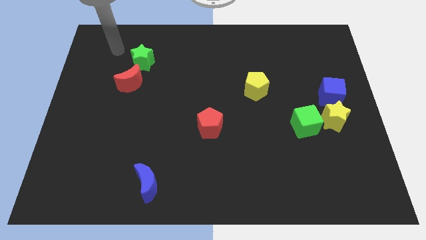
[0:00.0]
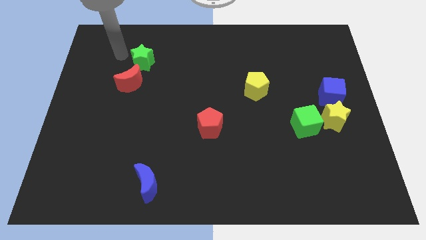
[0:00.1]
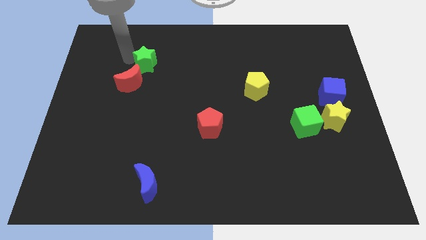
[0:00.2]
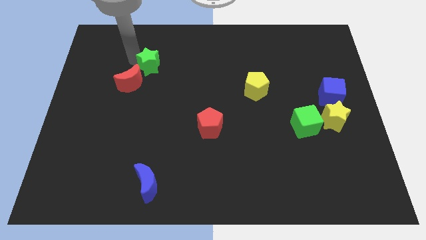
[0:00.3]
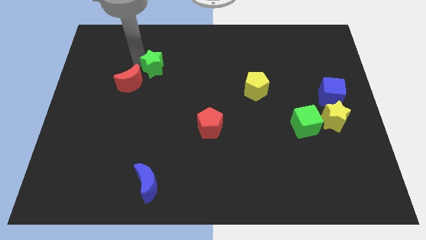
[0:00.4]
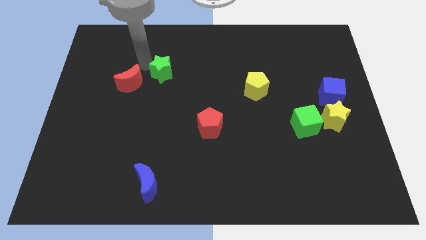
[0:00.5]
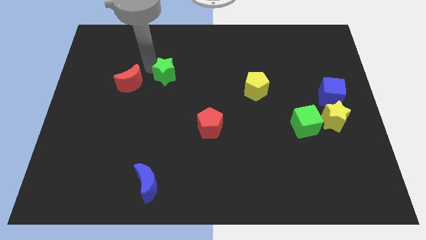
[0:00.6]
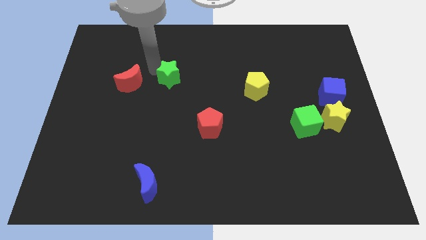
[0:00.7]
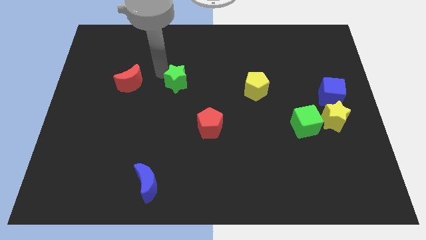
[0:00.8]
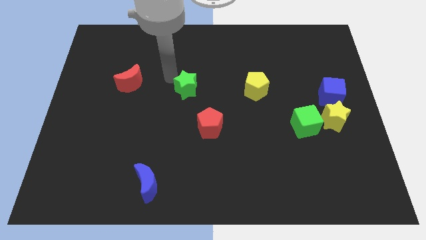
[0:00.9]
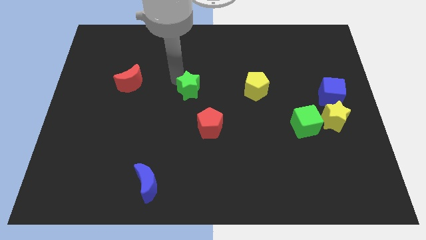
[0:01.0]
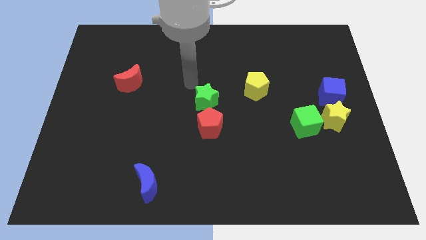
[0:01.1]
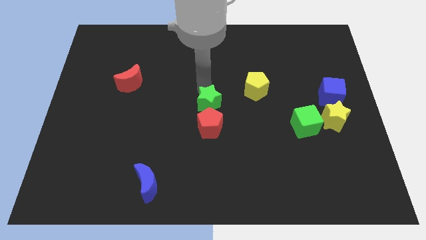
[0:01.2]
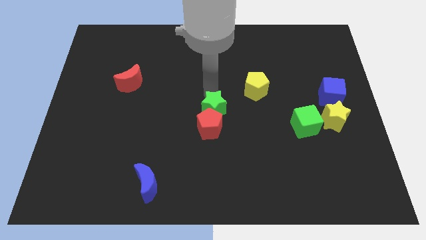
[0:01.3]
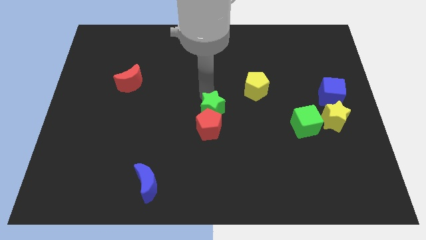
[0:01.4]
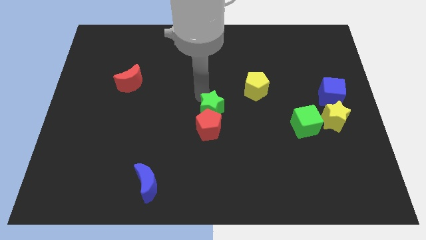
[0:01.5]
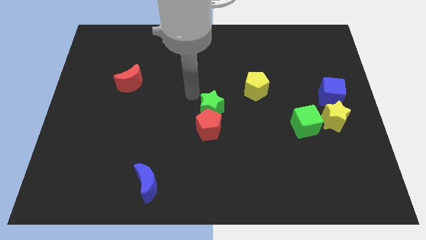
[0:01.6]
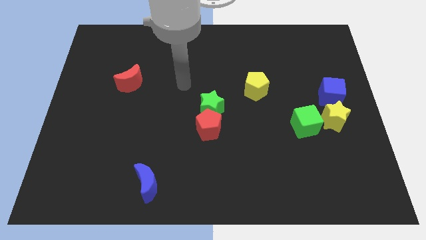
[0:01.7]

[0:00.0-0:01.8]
push the green star into the red pentagon

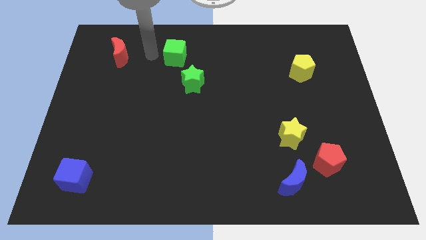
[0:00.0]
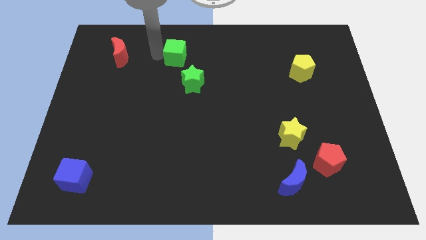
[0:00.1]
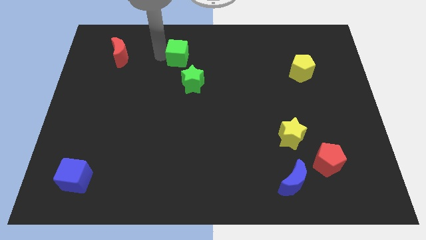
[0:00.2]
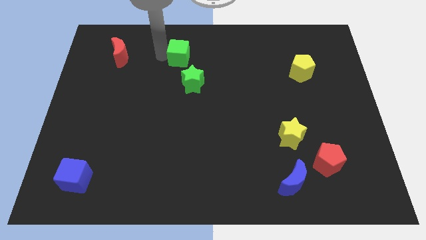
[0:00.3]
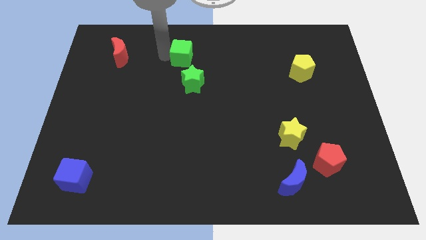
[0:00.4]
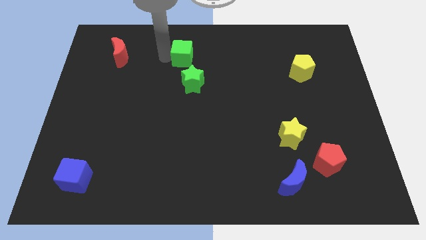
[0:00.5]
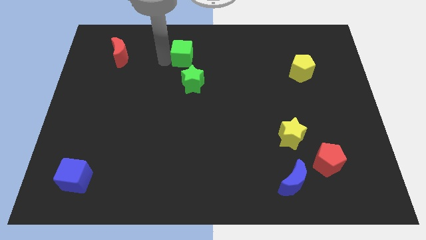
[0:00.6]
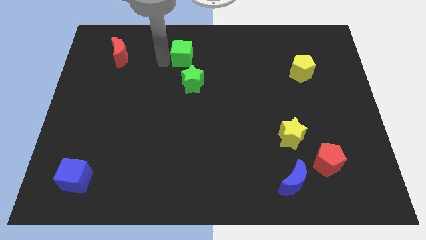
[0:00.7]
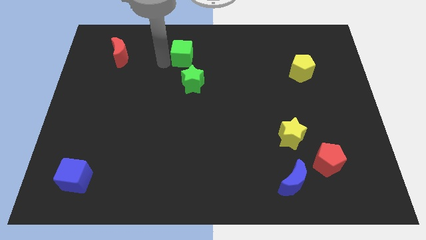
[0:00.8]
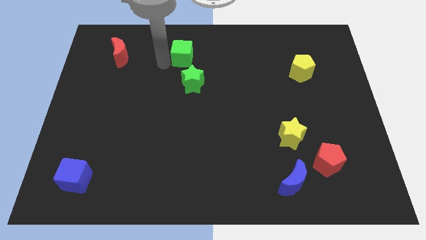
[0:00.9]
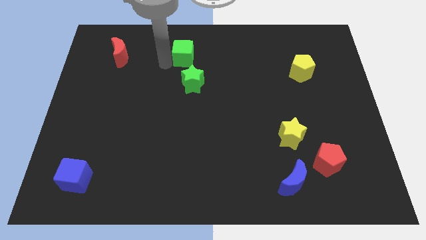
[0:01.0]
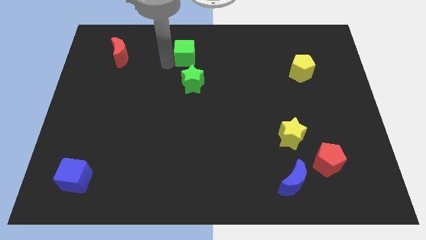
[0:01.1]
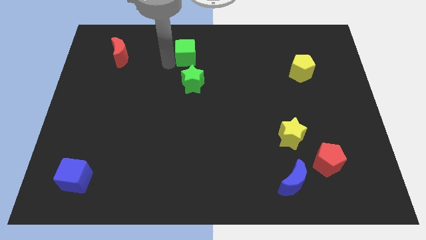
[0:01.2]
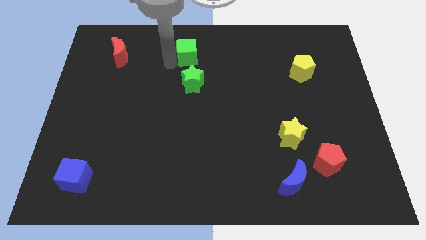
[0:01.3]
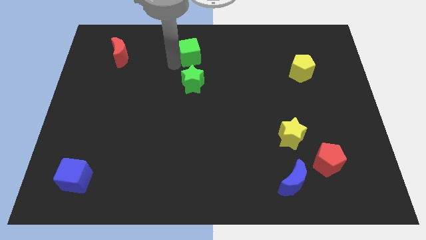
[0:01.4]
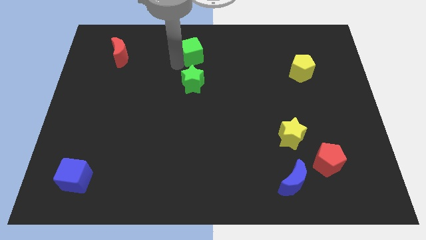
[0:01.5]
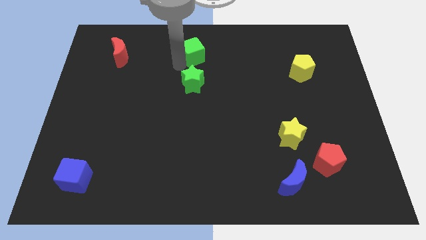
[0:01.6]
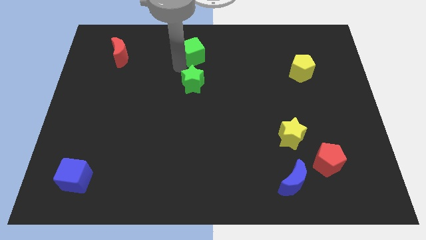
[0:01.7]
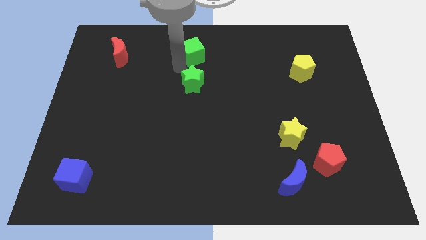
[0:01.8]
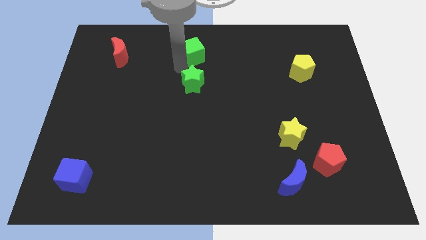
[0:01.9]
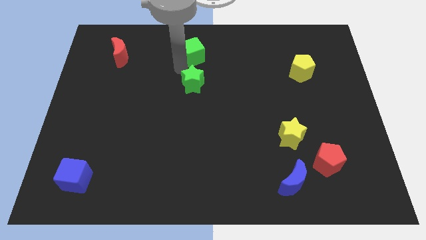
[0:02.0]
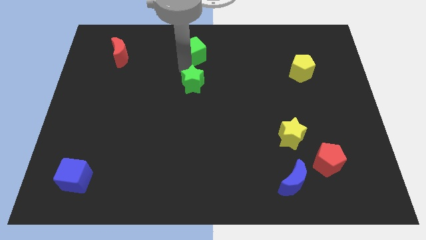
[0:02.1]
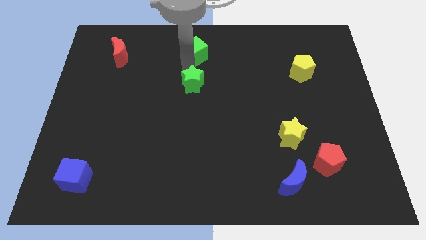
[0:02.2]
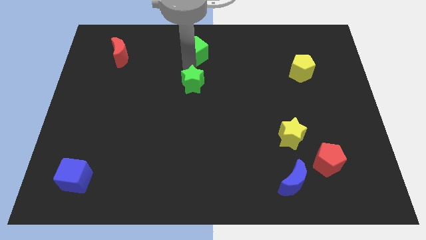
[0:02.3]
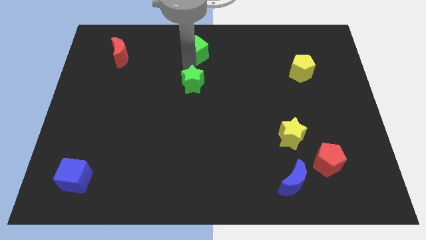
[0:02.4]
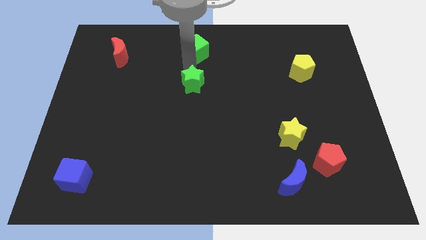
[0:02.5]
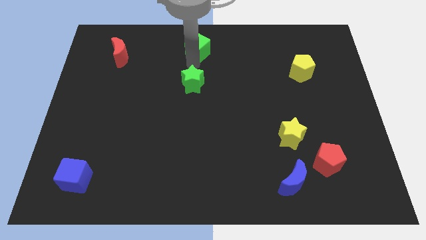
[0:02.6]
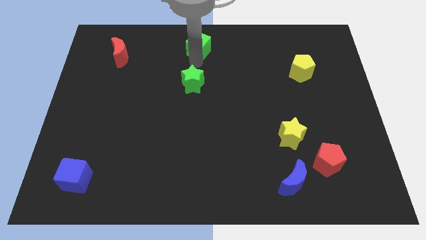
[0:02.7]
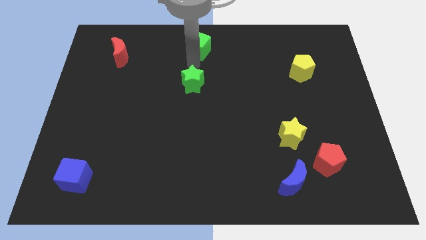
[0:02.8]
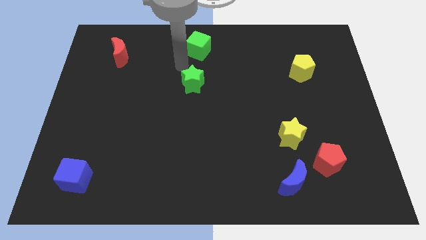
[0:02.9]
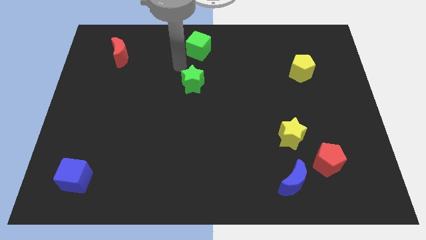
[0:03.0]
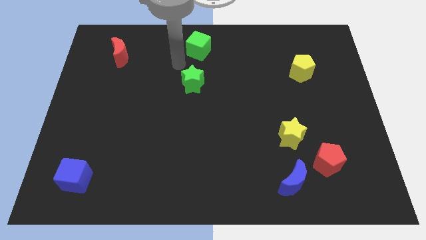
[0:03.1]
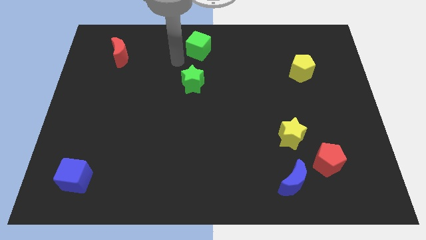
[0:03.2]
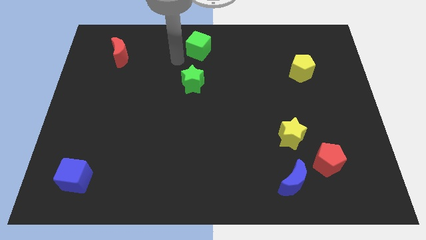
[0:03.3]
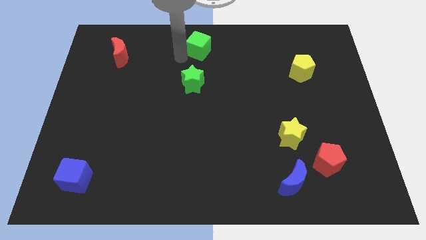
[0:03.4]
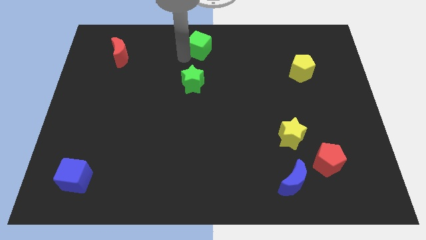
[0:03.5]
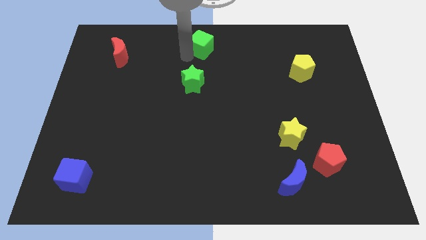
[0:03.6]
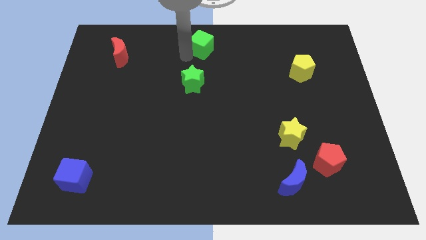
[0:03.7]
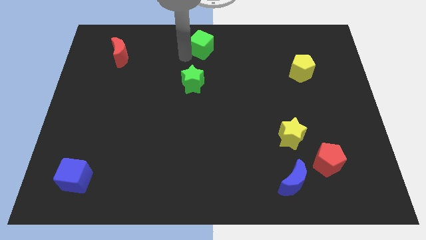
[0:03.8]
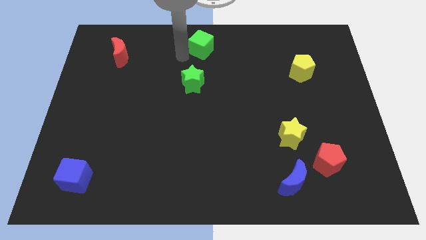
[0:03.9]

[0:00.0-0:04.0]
move the green cube above to the green star

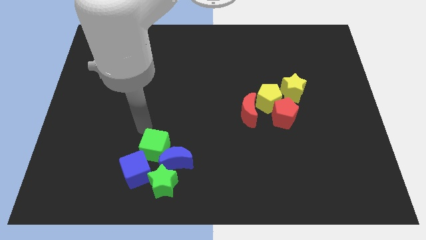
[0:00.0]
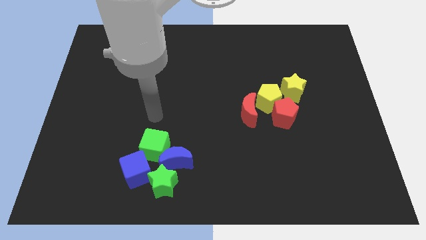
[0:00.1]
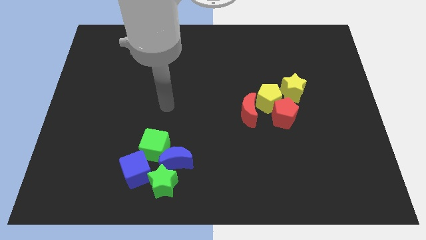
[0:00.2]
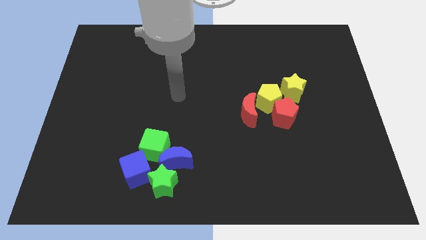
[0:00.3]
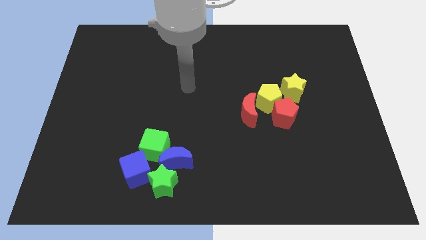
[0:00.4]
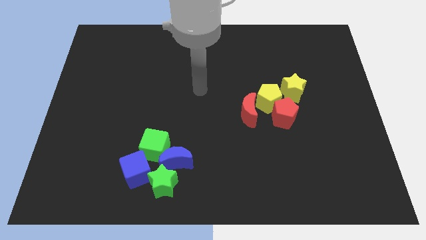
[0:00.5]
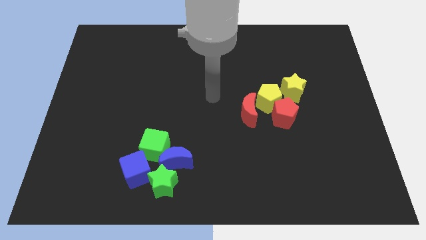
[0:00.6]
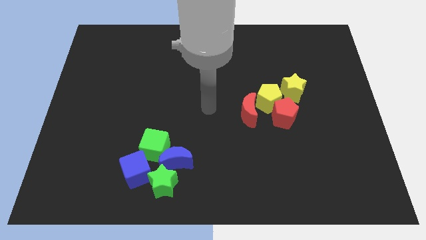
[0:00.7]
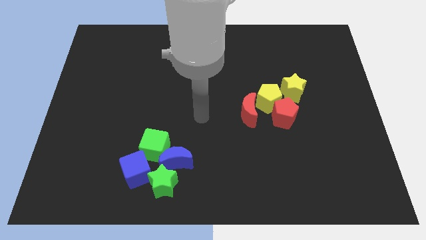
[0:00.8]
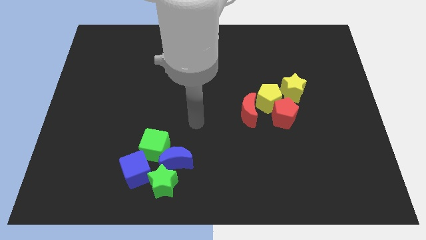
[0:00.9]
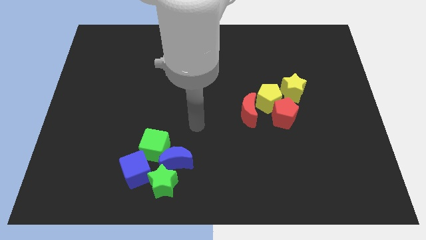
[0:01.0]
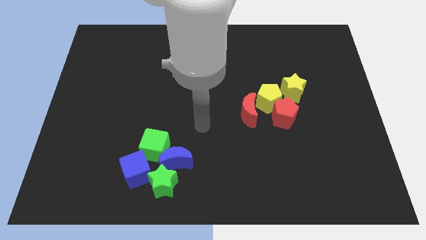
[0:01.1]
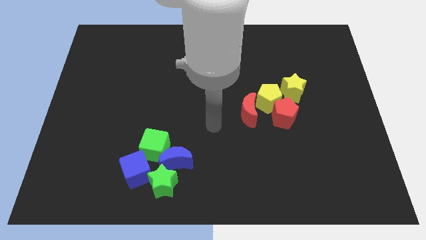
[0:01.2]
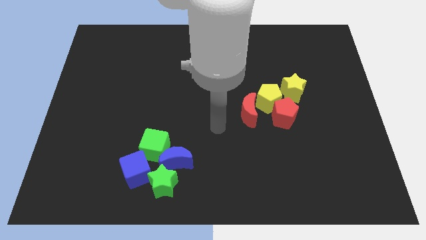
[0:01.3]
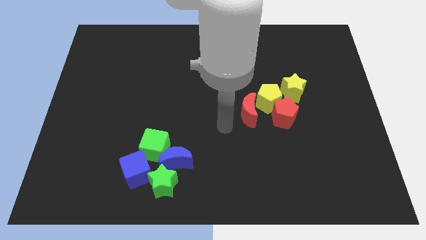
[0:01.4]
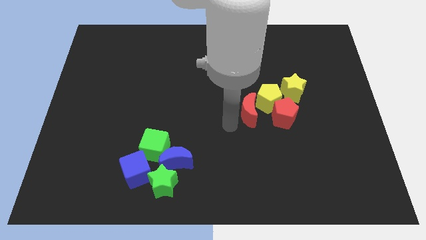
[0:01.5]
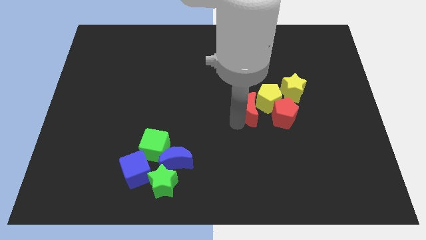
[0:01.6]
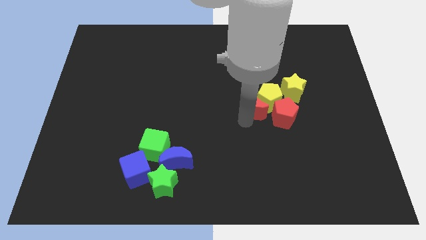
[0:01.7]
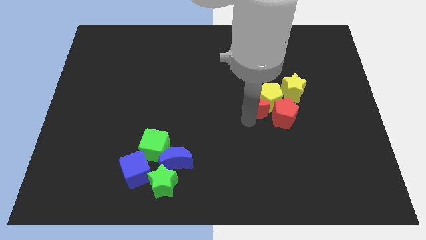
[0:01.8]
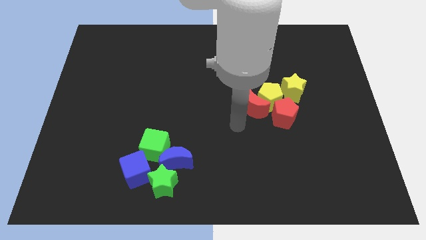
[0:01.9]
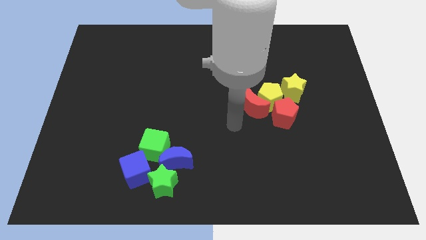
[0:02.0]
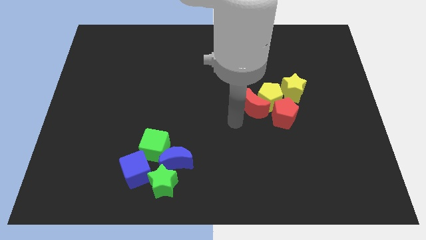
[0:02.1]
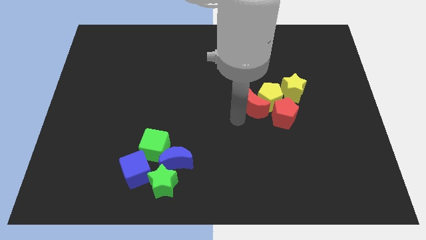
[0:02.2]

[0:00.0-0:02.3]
push the red crescent into yellow pentagon

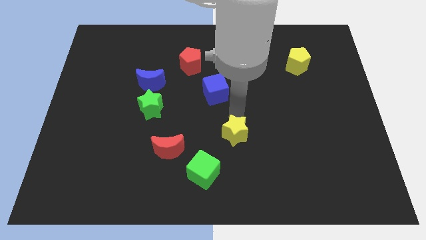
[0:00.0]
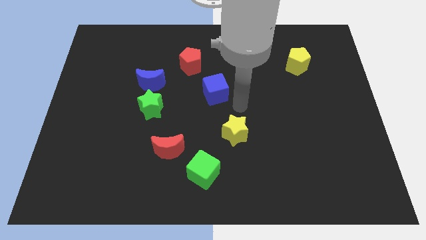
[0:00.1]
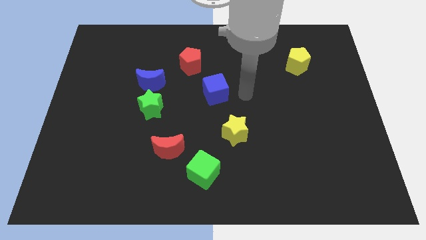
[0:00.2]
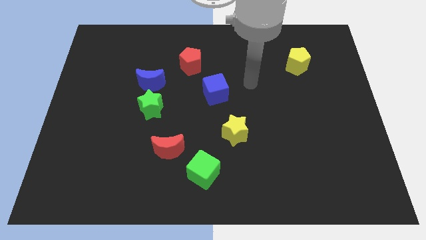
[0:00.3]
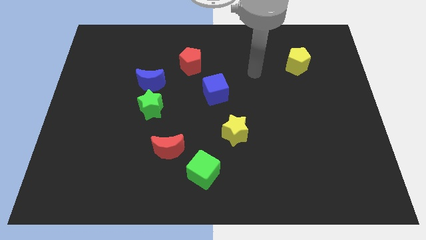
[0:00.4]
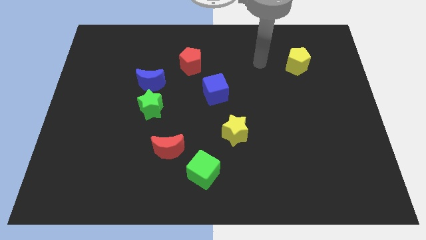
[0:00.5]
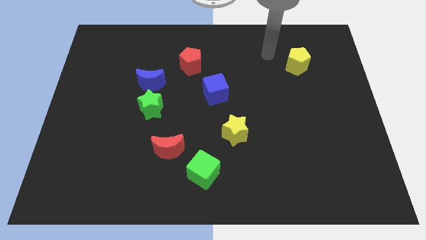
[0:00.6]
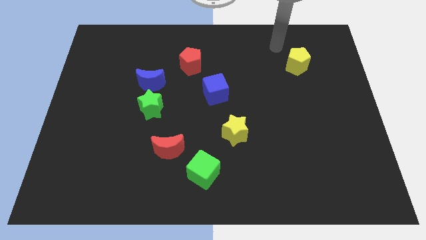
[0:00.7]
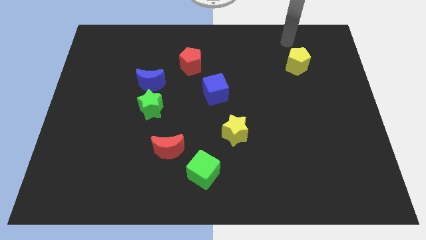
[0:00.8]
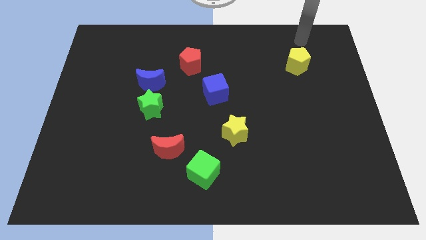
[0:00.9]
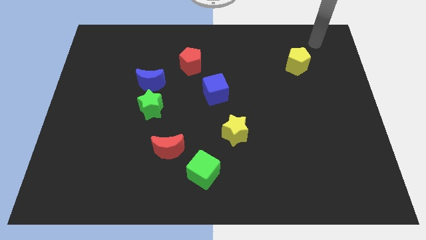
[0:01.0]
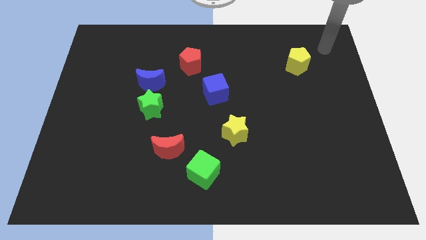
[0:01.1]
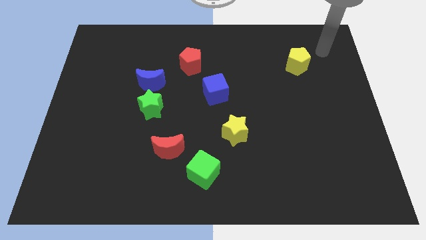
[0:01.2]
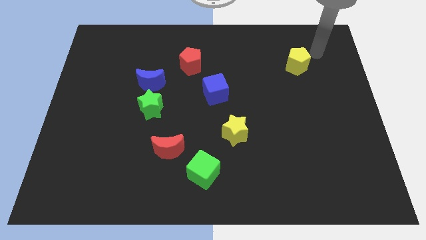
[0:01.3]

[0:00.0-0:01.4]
move the arm to the right of the yellow pentagon
